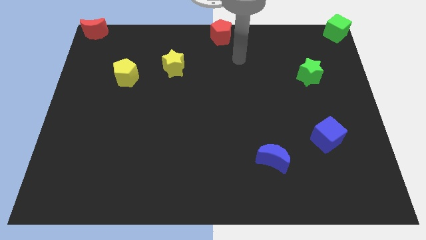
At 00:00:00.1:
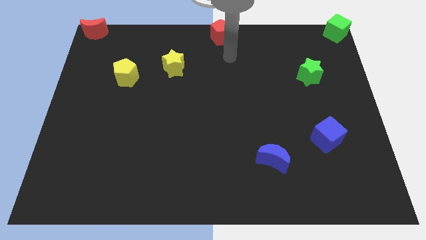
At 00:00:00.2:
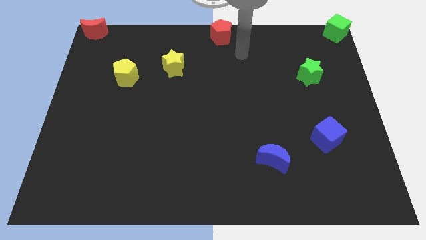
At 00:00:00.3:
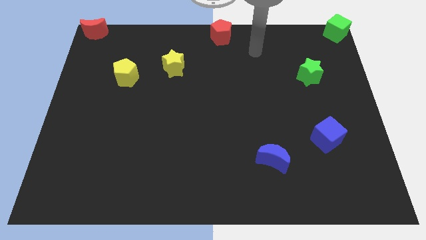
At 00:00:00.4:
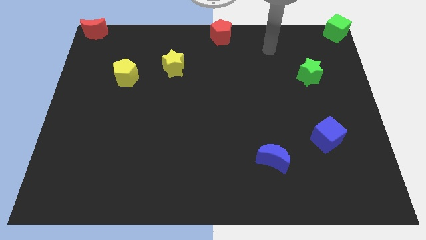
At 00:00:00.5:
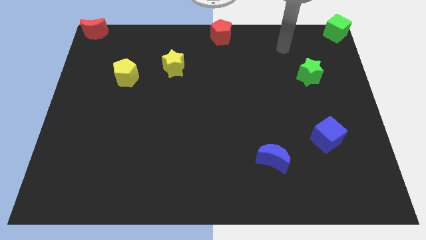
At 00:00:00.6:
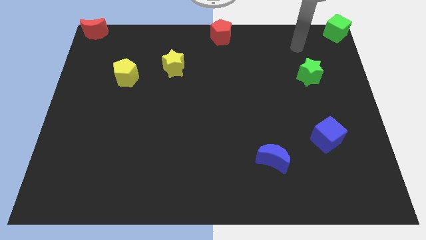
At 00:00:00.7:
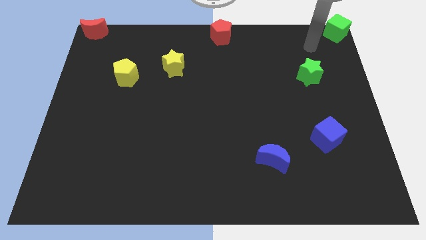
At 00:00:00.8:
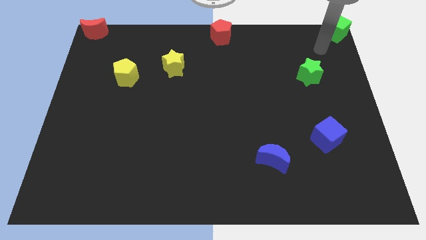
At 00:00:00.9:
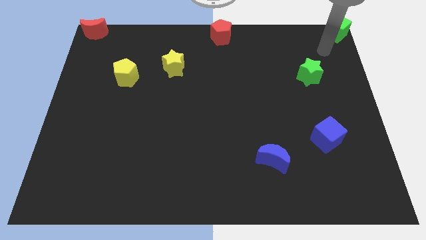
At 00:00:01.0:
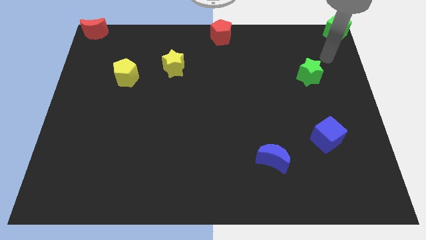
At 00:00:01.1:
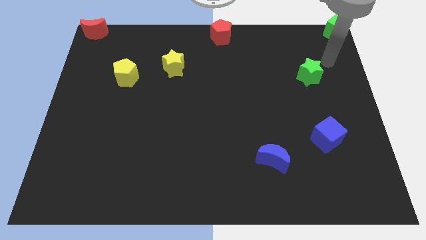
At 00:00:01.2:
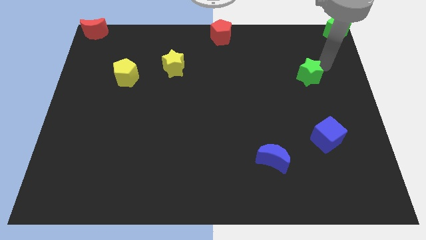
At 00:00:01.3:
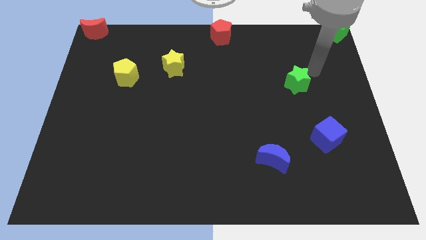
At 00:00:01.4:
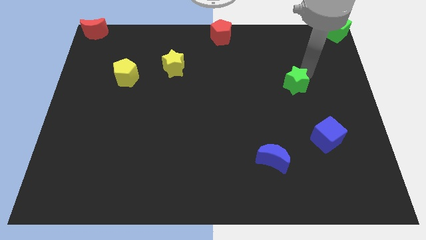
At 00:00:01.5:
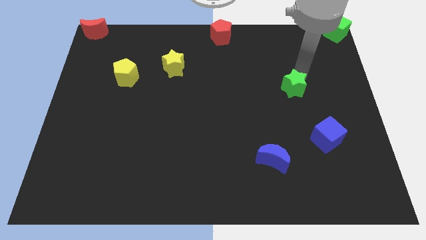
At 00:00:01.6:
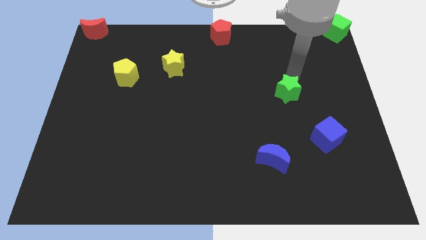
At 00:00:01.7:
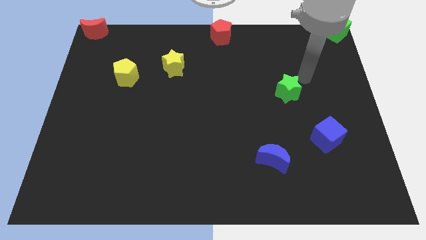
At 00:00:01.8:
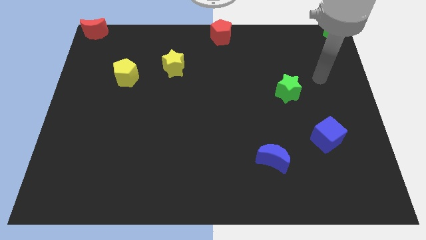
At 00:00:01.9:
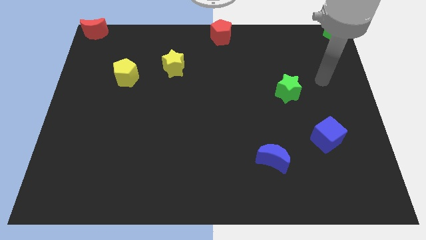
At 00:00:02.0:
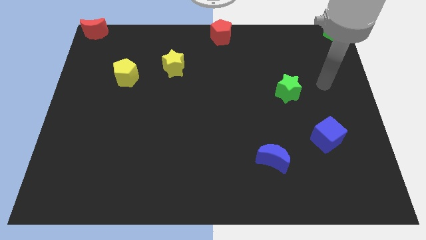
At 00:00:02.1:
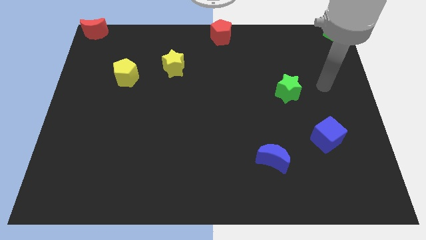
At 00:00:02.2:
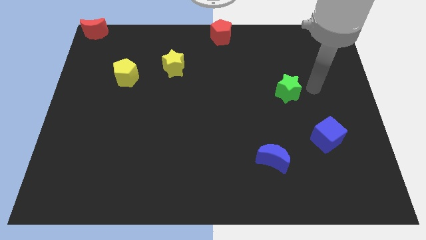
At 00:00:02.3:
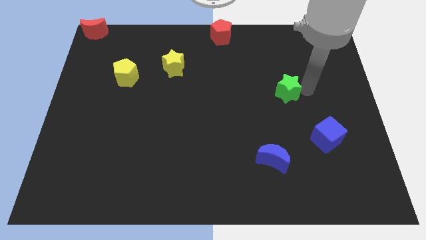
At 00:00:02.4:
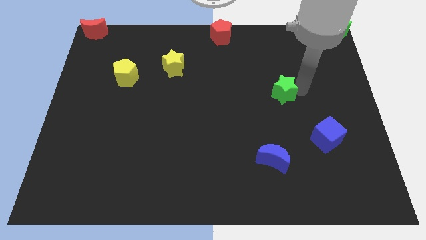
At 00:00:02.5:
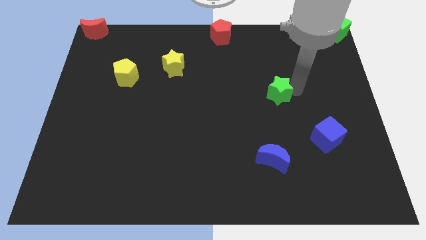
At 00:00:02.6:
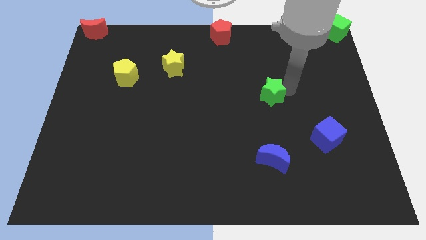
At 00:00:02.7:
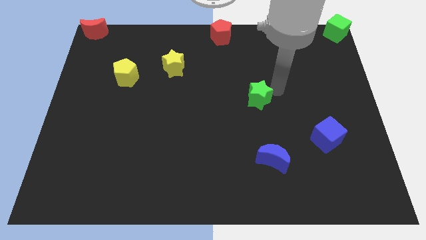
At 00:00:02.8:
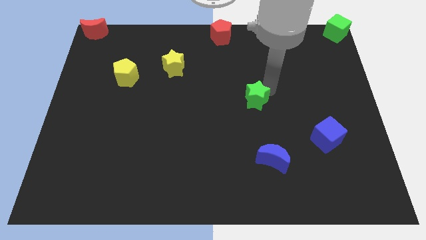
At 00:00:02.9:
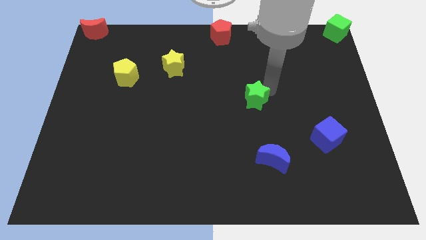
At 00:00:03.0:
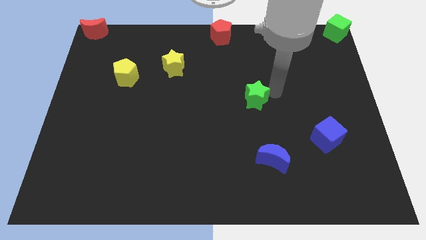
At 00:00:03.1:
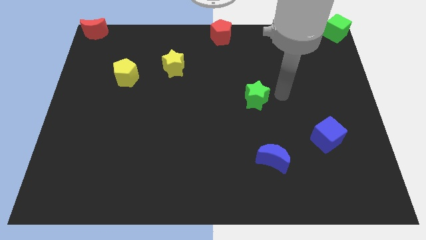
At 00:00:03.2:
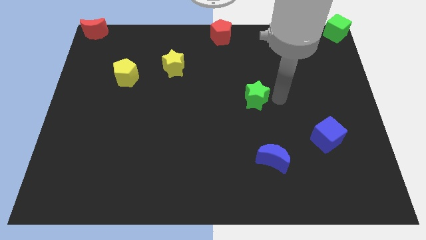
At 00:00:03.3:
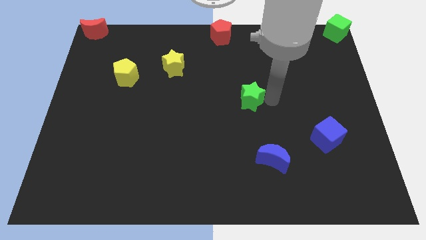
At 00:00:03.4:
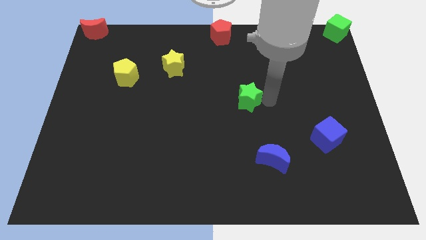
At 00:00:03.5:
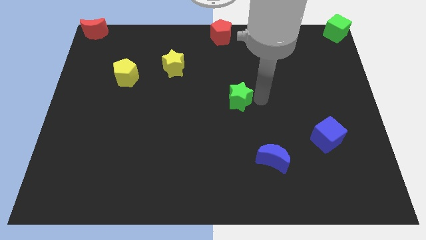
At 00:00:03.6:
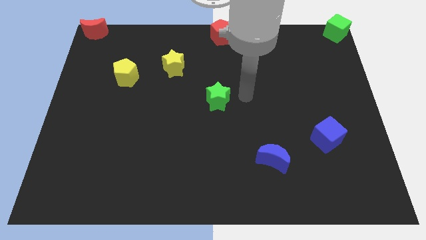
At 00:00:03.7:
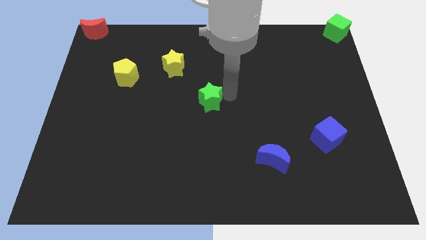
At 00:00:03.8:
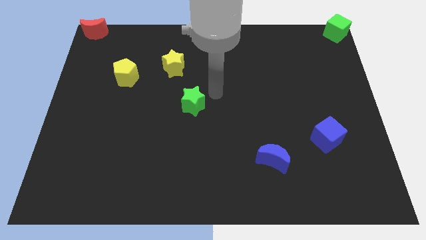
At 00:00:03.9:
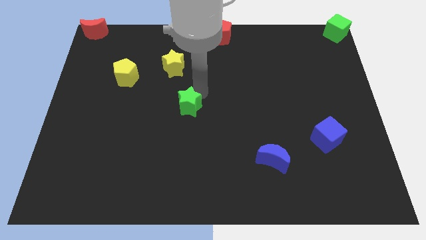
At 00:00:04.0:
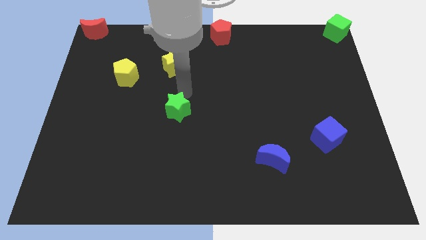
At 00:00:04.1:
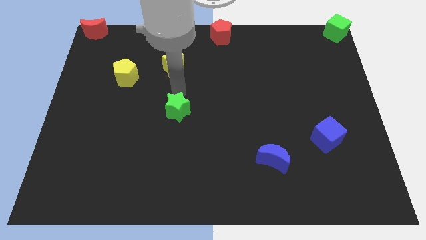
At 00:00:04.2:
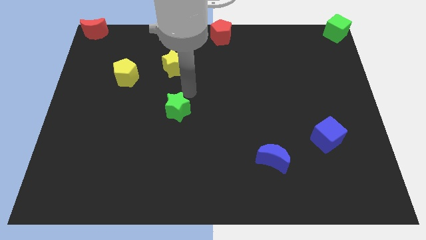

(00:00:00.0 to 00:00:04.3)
place the green star below the yellow star

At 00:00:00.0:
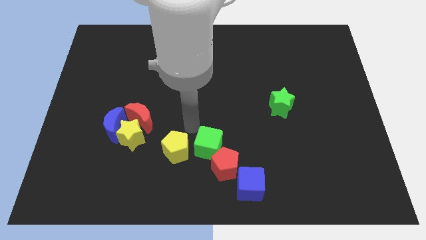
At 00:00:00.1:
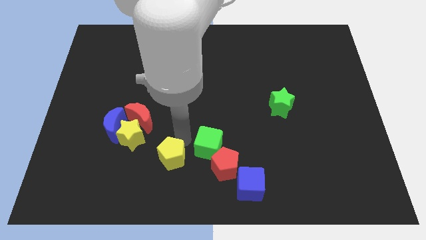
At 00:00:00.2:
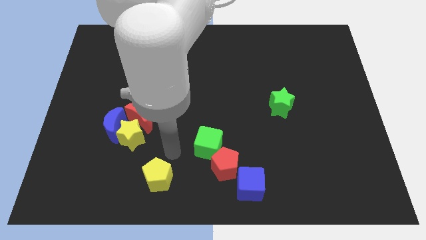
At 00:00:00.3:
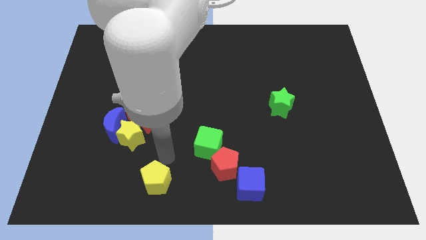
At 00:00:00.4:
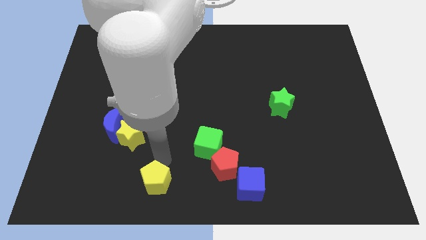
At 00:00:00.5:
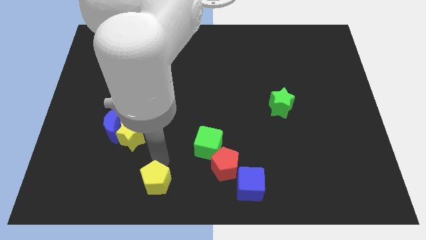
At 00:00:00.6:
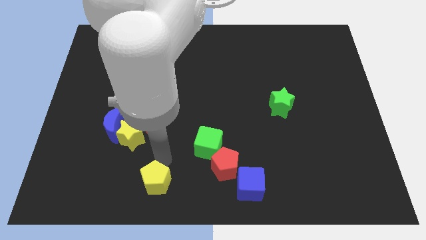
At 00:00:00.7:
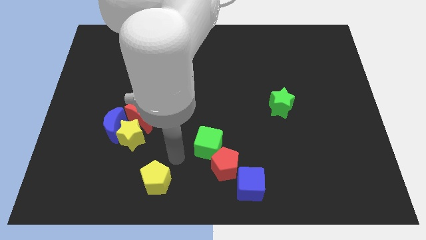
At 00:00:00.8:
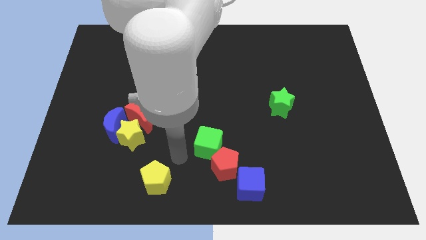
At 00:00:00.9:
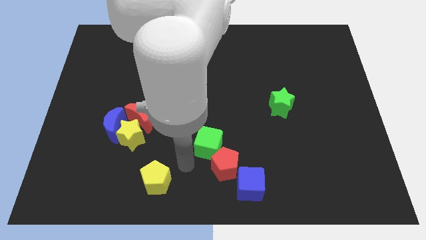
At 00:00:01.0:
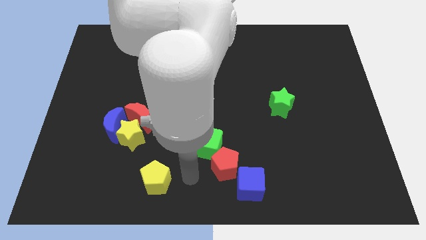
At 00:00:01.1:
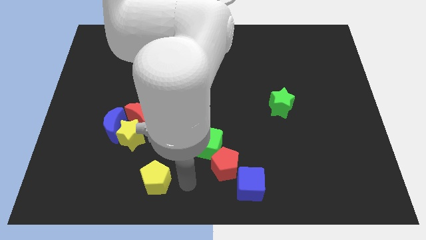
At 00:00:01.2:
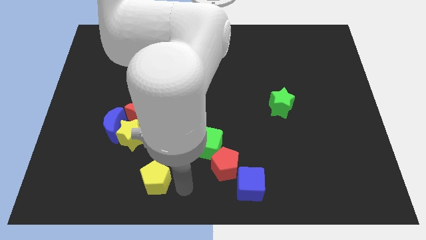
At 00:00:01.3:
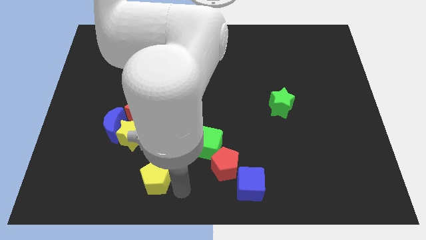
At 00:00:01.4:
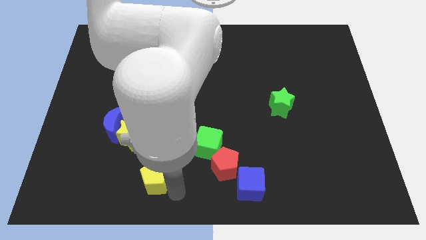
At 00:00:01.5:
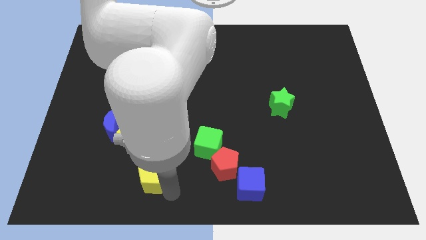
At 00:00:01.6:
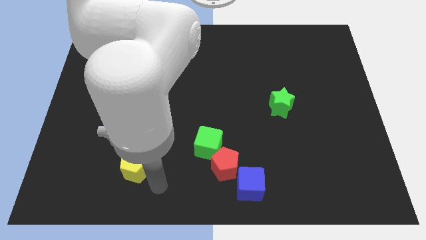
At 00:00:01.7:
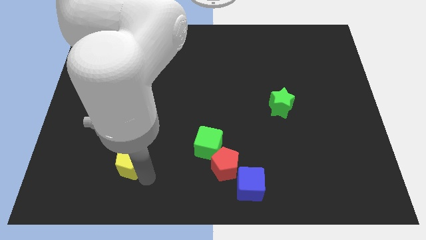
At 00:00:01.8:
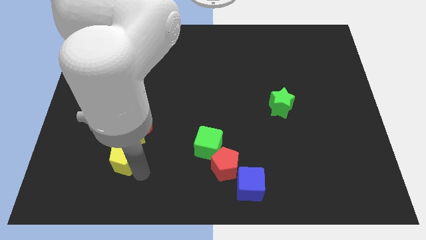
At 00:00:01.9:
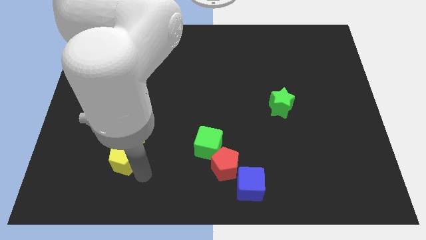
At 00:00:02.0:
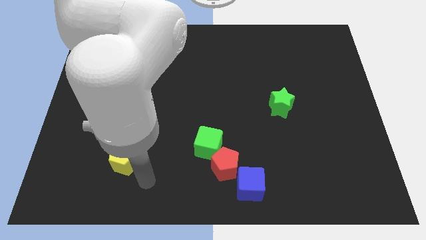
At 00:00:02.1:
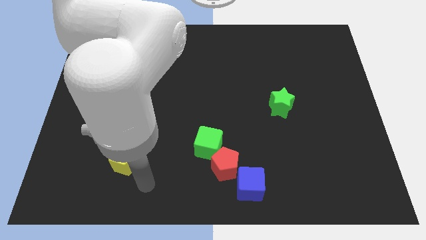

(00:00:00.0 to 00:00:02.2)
move the yellow pentagon to the bottom of the yellow star

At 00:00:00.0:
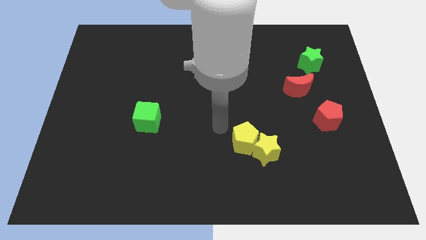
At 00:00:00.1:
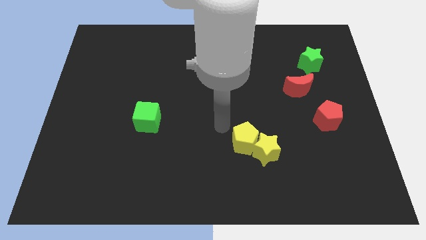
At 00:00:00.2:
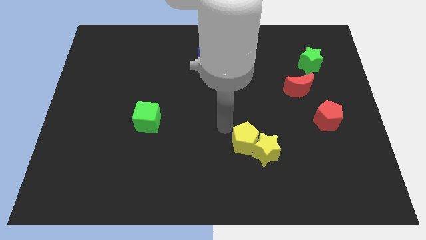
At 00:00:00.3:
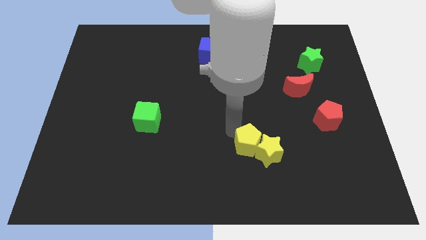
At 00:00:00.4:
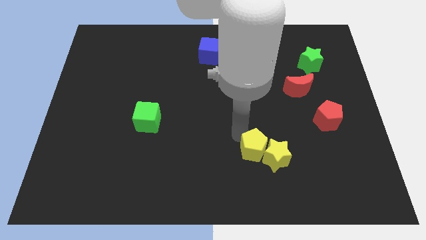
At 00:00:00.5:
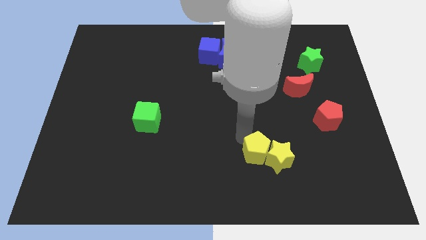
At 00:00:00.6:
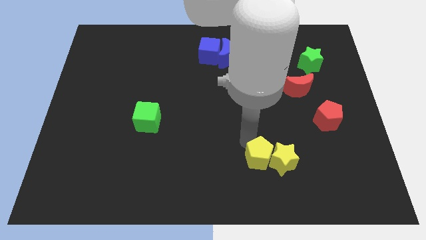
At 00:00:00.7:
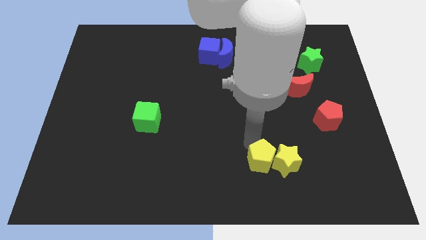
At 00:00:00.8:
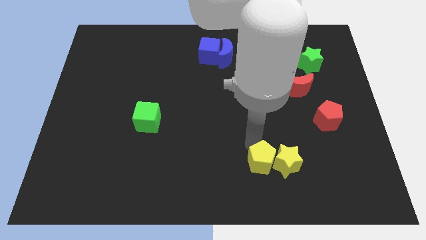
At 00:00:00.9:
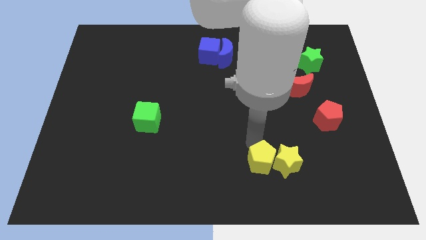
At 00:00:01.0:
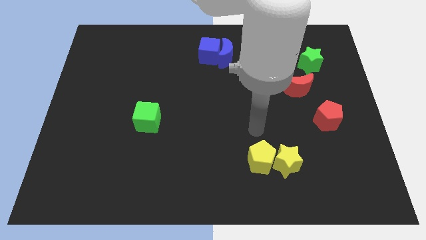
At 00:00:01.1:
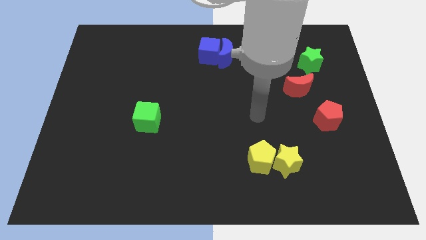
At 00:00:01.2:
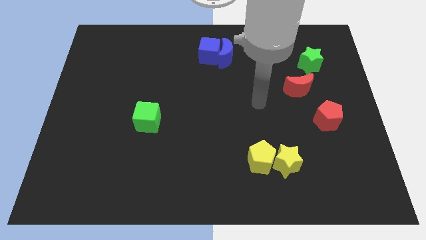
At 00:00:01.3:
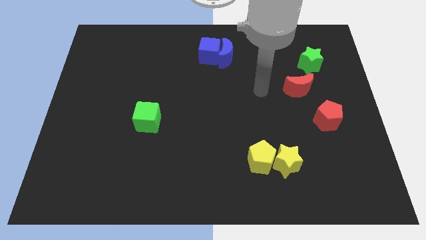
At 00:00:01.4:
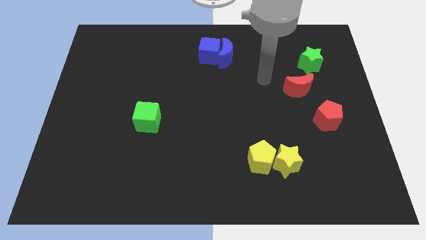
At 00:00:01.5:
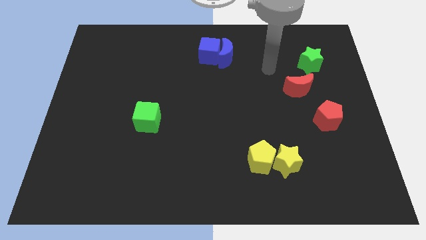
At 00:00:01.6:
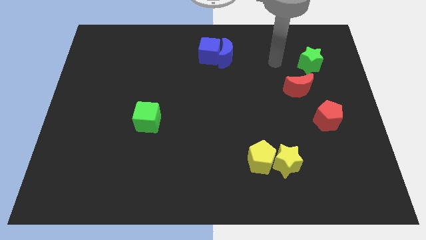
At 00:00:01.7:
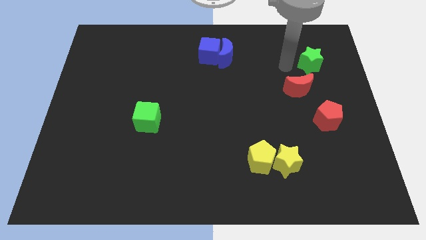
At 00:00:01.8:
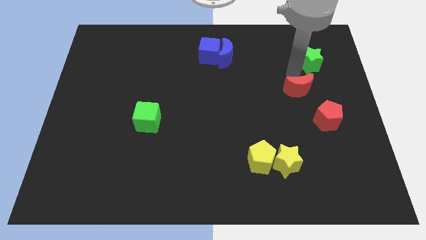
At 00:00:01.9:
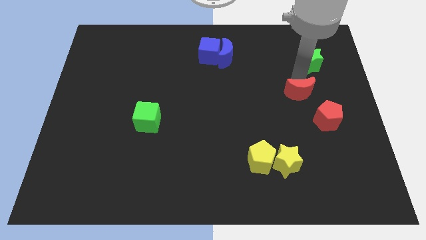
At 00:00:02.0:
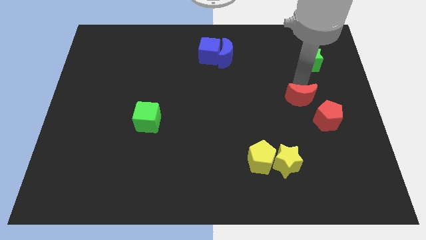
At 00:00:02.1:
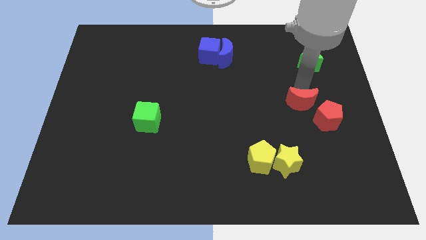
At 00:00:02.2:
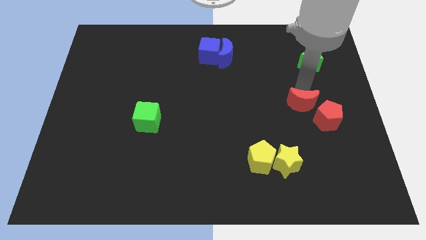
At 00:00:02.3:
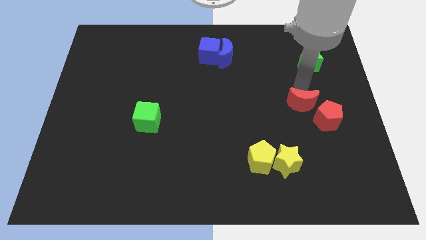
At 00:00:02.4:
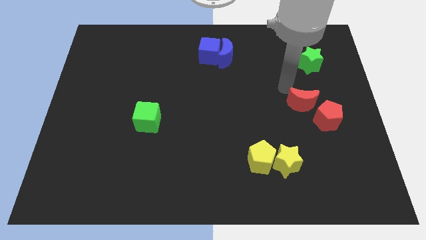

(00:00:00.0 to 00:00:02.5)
place the red moon diagonally to the top left of the red pentagon

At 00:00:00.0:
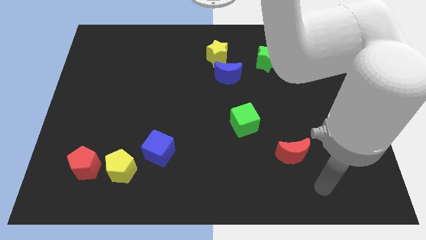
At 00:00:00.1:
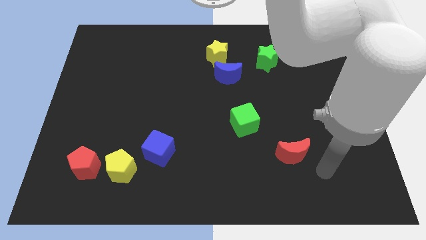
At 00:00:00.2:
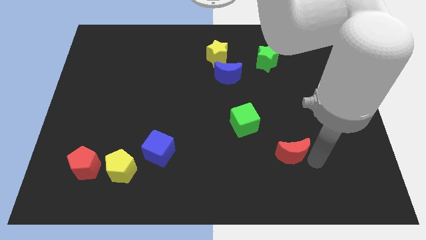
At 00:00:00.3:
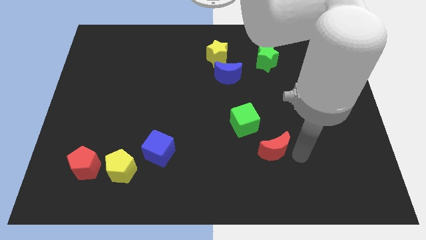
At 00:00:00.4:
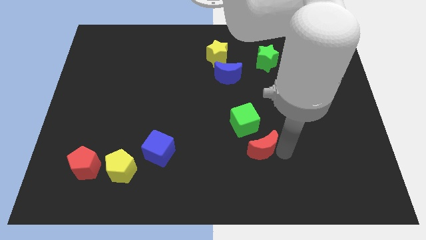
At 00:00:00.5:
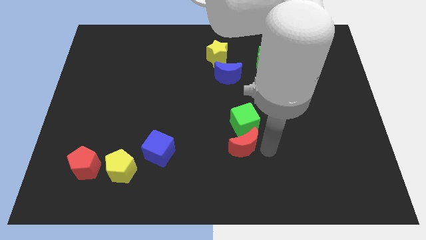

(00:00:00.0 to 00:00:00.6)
place the red moon down to the green cube
